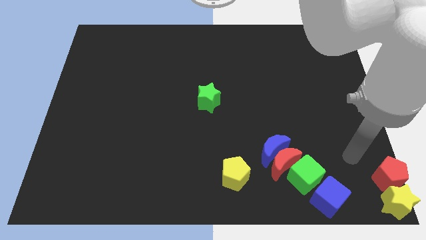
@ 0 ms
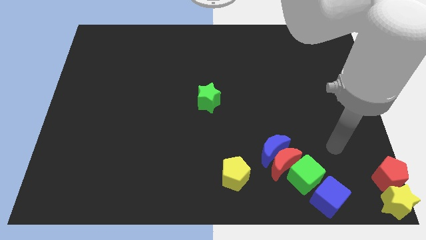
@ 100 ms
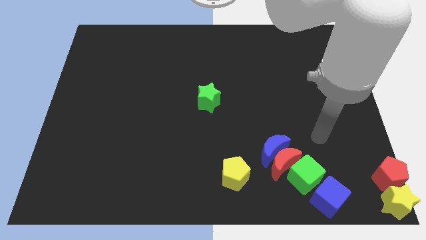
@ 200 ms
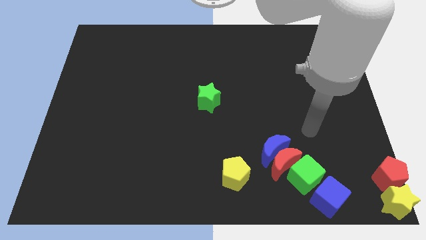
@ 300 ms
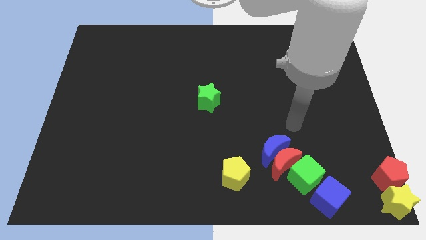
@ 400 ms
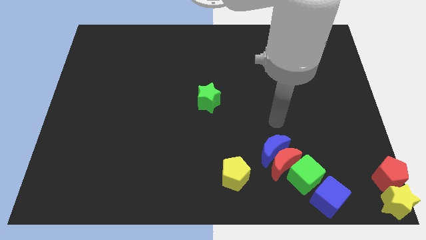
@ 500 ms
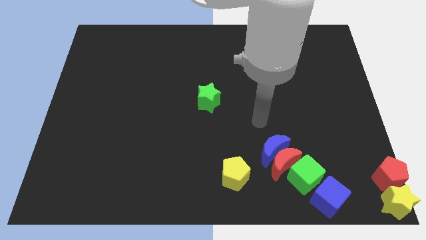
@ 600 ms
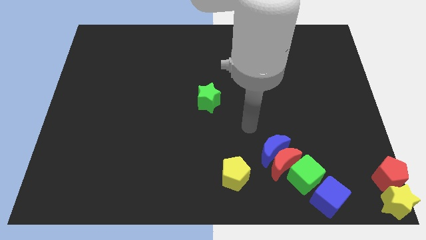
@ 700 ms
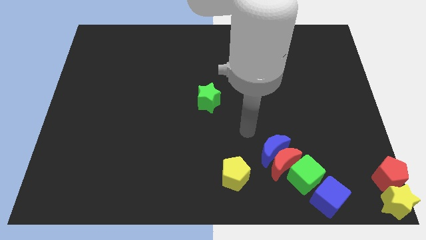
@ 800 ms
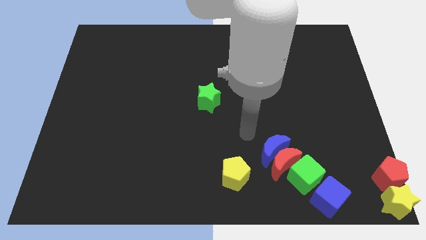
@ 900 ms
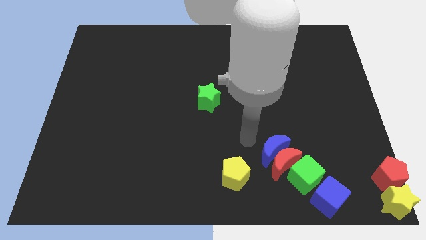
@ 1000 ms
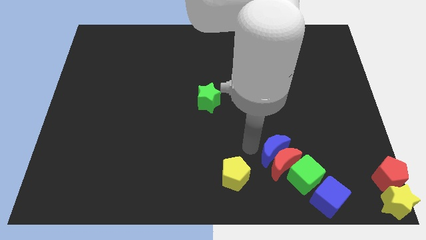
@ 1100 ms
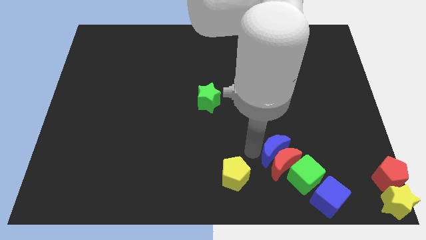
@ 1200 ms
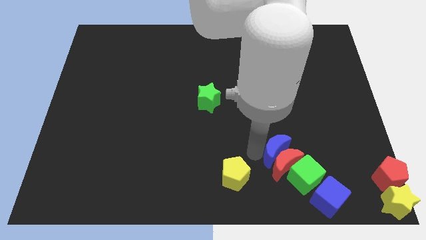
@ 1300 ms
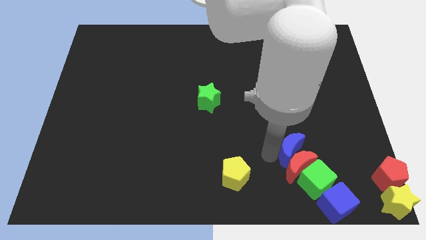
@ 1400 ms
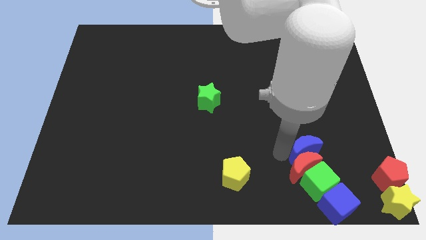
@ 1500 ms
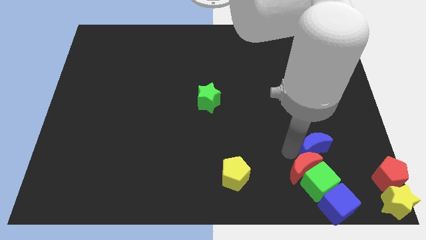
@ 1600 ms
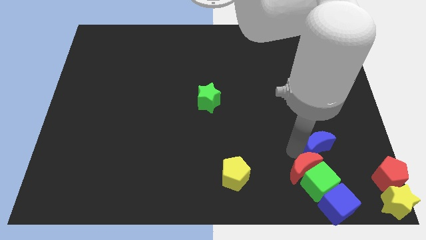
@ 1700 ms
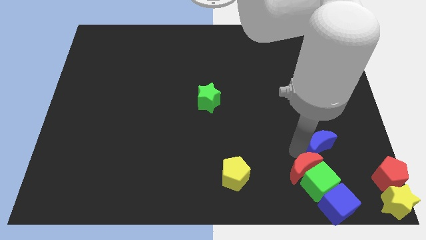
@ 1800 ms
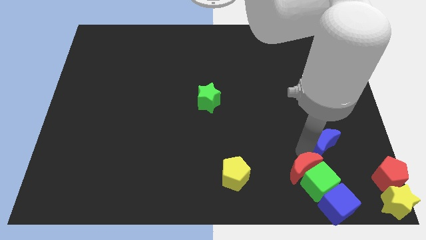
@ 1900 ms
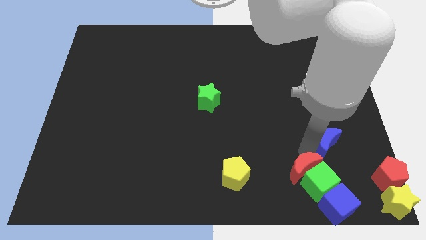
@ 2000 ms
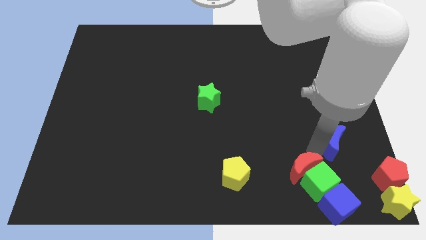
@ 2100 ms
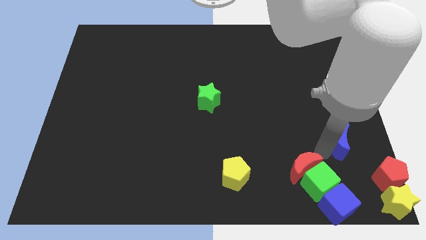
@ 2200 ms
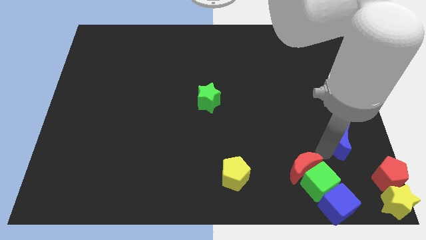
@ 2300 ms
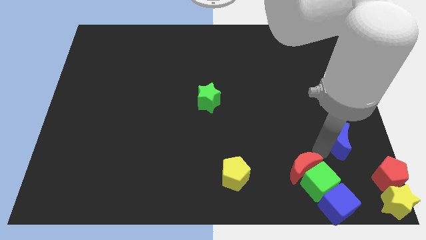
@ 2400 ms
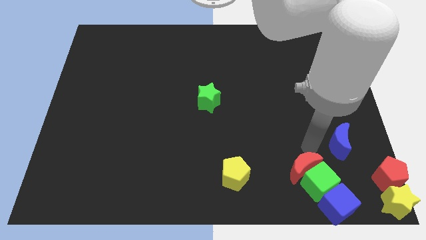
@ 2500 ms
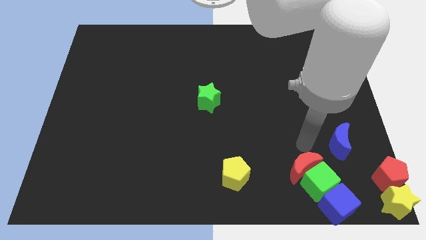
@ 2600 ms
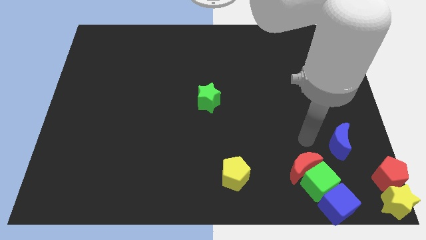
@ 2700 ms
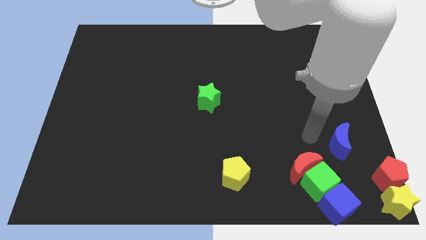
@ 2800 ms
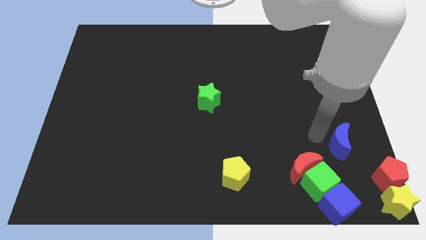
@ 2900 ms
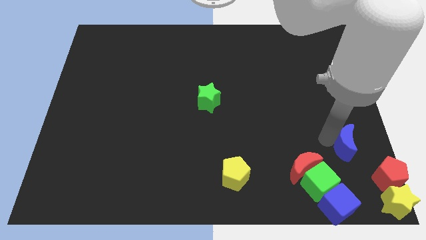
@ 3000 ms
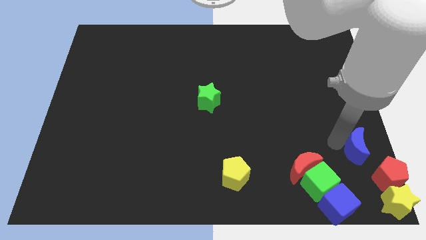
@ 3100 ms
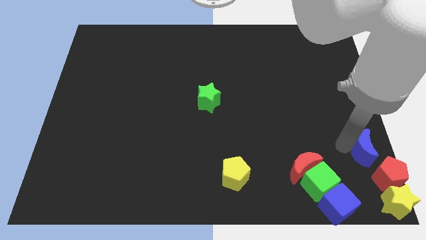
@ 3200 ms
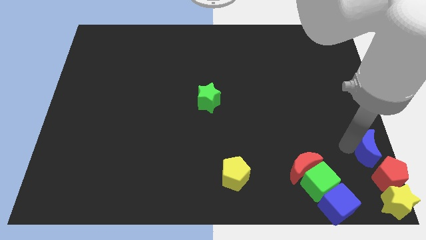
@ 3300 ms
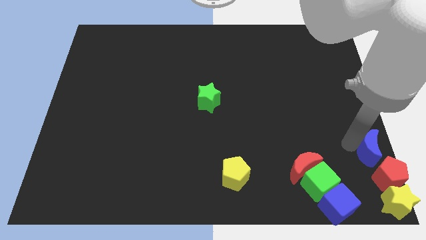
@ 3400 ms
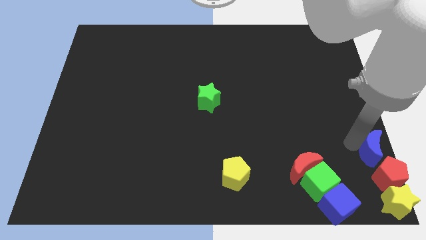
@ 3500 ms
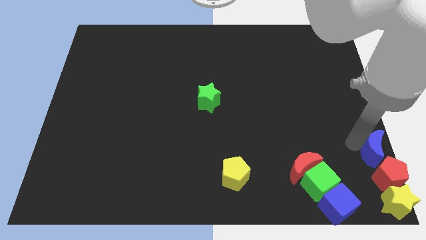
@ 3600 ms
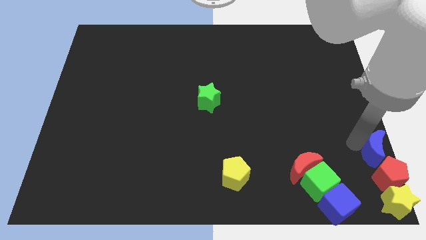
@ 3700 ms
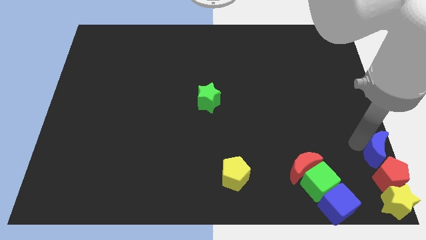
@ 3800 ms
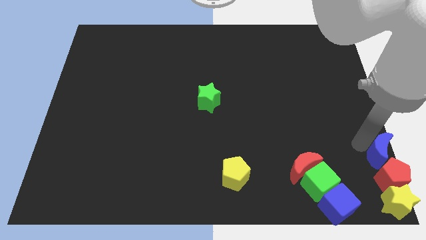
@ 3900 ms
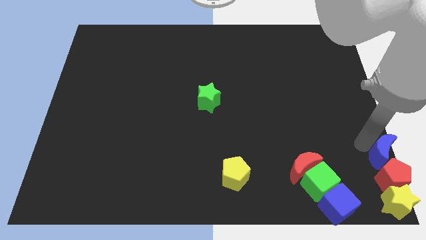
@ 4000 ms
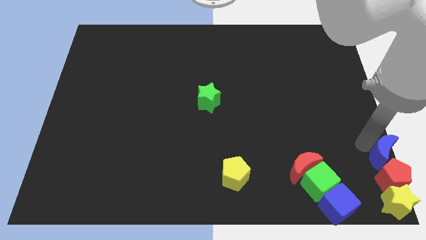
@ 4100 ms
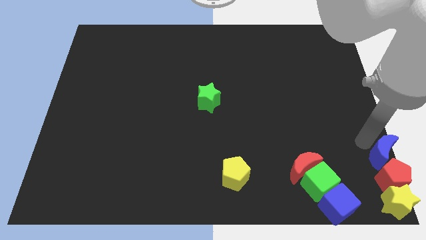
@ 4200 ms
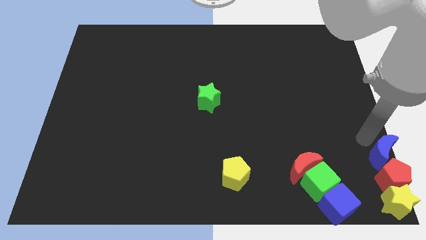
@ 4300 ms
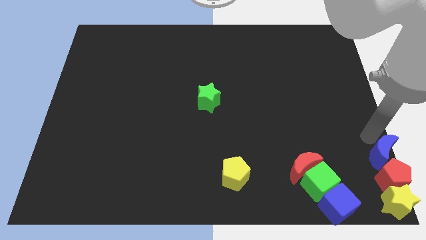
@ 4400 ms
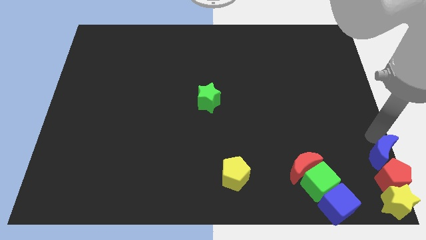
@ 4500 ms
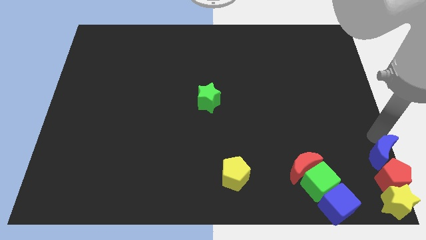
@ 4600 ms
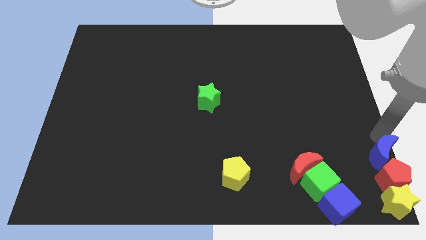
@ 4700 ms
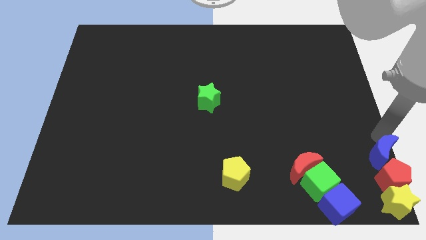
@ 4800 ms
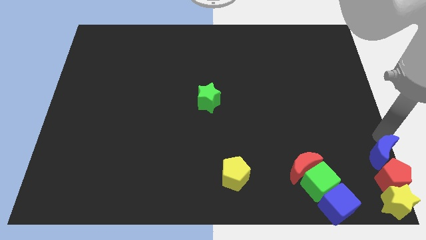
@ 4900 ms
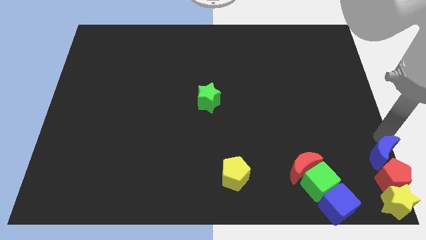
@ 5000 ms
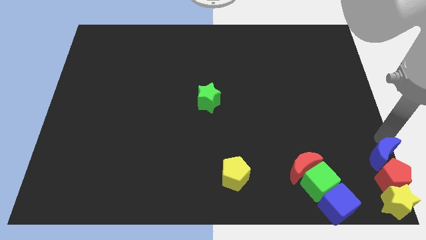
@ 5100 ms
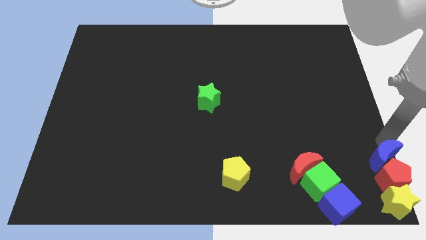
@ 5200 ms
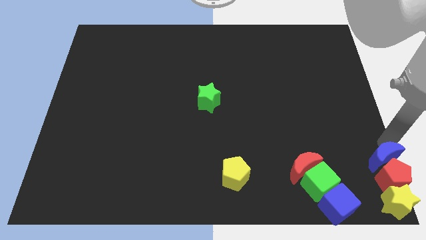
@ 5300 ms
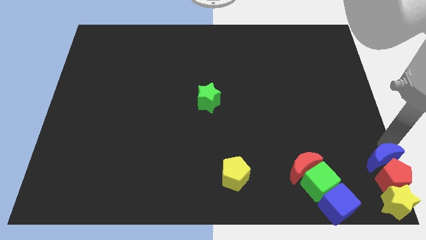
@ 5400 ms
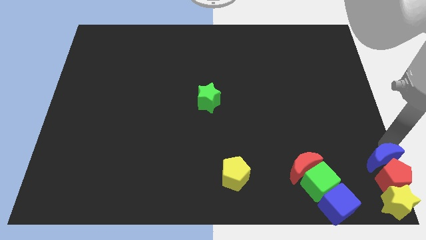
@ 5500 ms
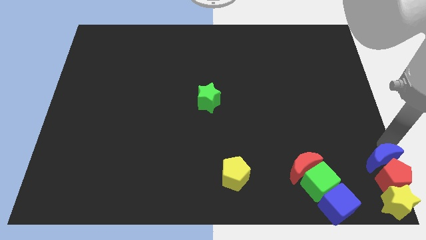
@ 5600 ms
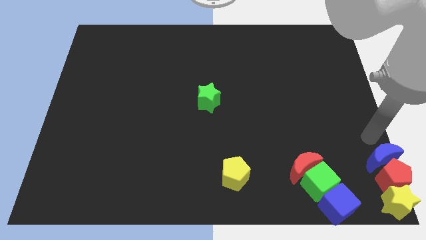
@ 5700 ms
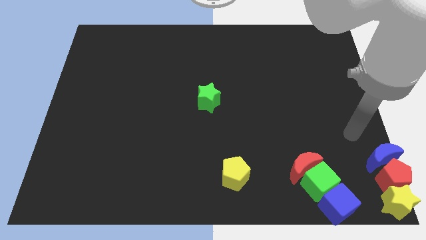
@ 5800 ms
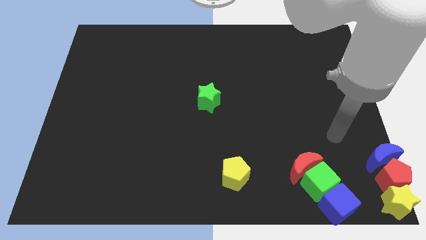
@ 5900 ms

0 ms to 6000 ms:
place the blue crescent above the red pentagon

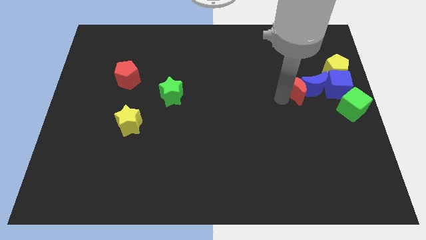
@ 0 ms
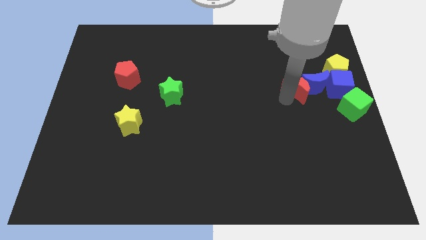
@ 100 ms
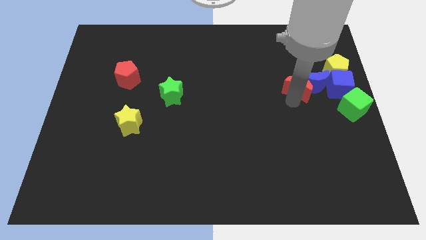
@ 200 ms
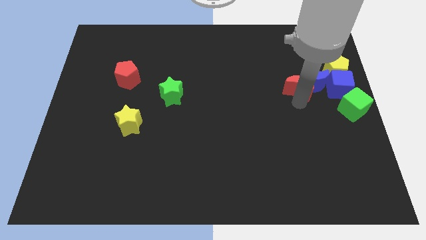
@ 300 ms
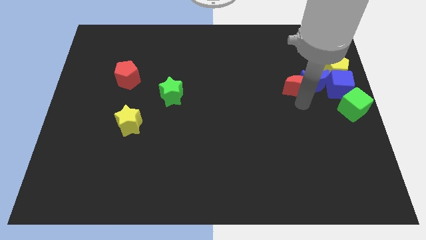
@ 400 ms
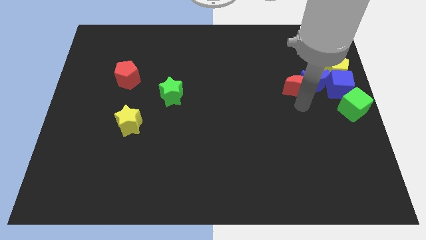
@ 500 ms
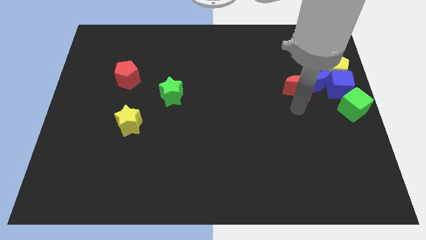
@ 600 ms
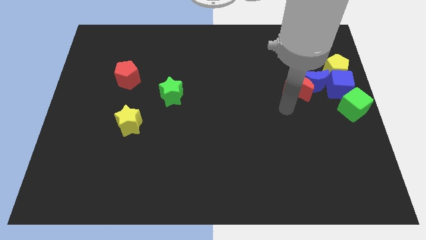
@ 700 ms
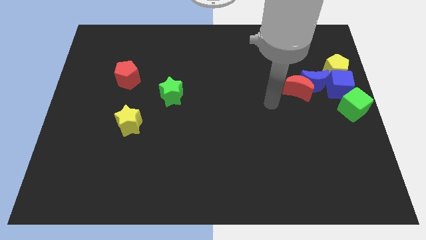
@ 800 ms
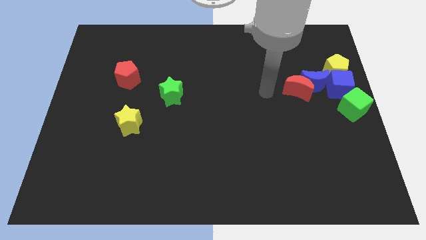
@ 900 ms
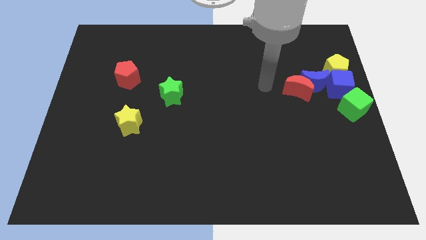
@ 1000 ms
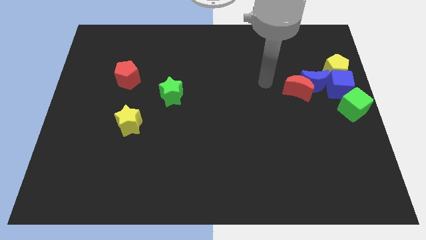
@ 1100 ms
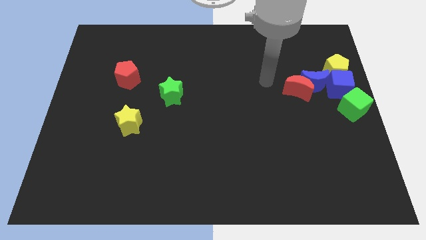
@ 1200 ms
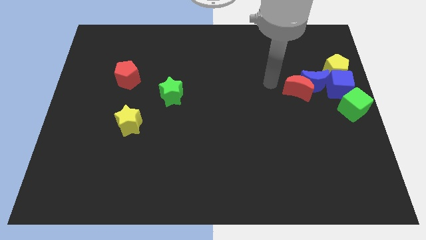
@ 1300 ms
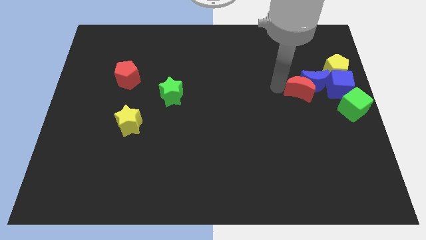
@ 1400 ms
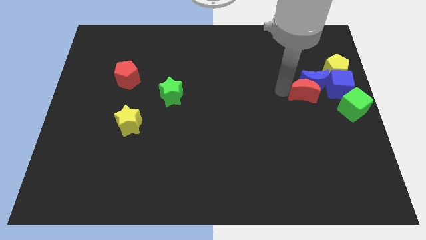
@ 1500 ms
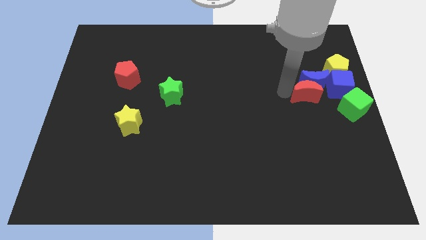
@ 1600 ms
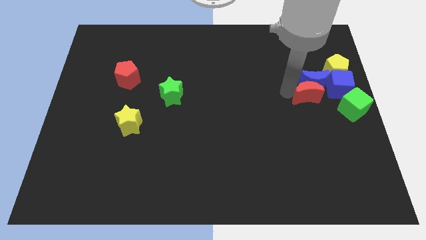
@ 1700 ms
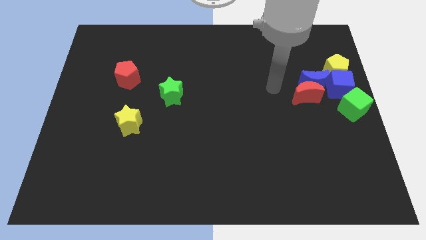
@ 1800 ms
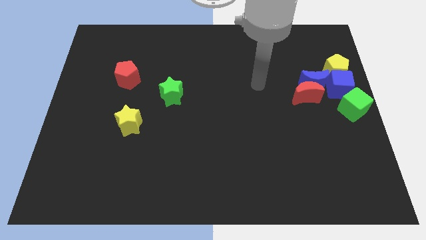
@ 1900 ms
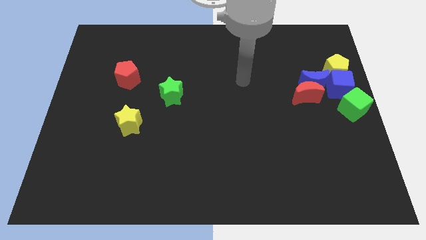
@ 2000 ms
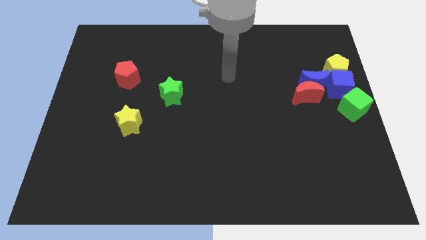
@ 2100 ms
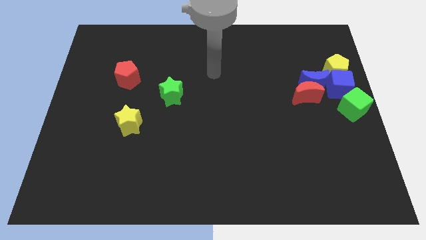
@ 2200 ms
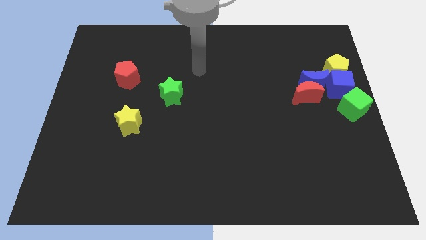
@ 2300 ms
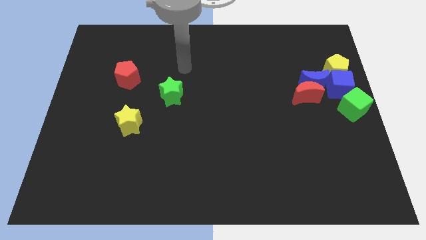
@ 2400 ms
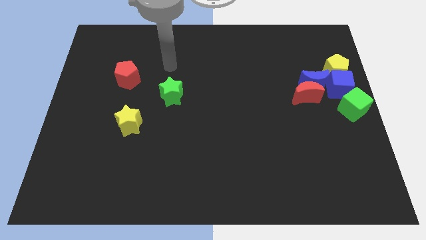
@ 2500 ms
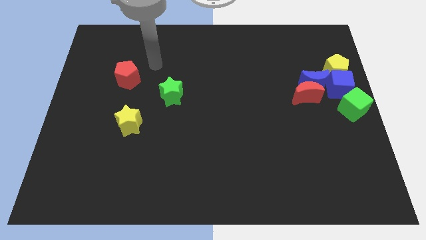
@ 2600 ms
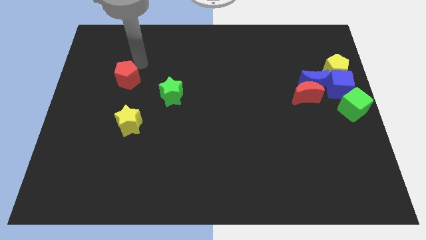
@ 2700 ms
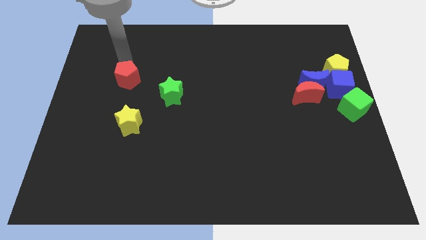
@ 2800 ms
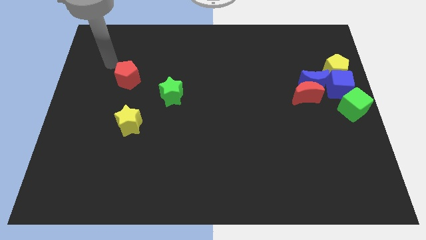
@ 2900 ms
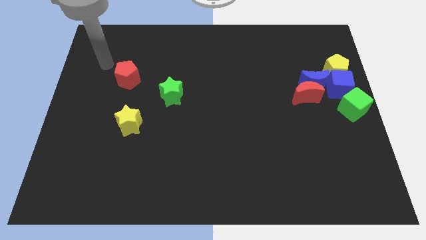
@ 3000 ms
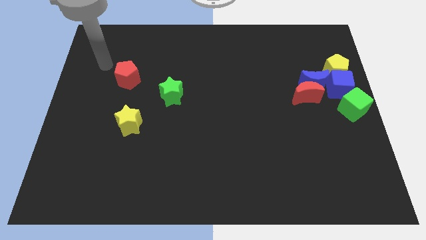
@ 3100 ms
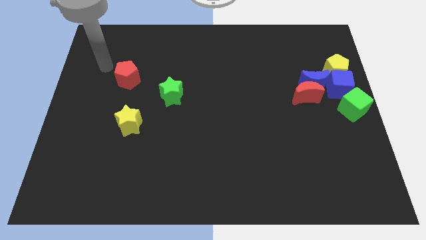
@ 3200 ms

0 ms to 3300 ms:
place red crescent below blue crescent
